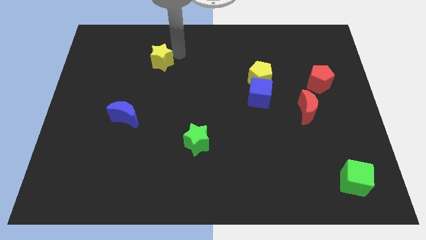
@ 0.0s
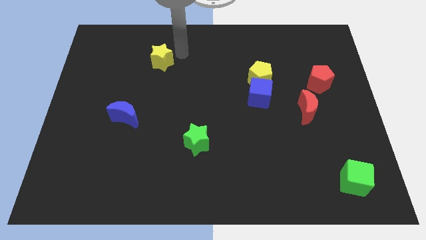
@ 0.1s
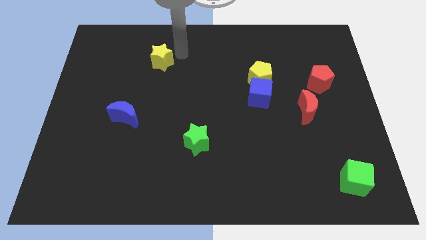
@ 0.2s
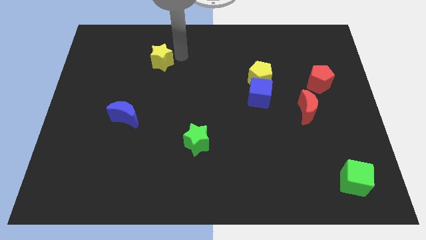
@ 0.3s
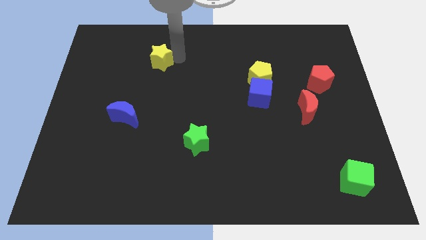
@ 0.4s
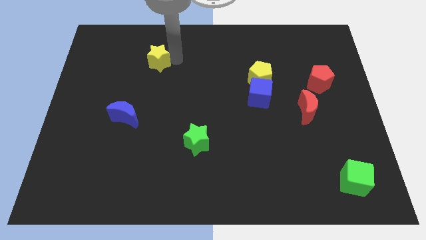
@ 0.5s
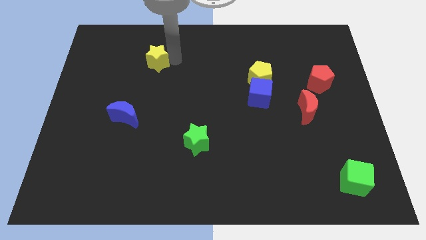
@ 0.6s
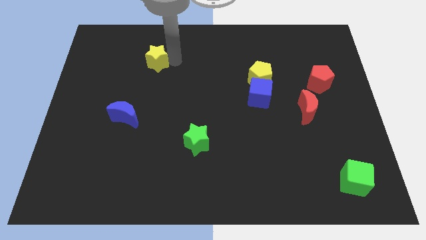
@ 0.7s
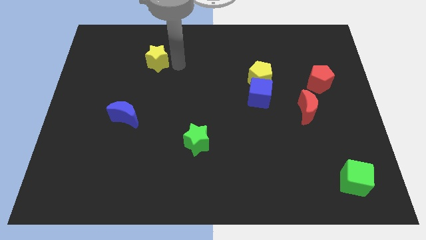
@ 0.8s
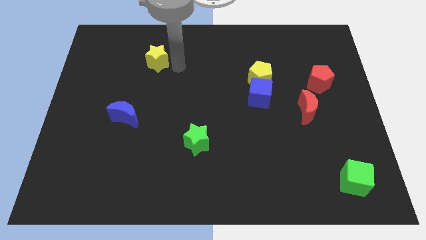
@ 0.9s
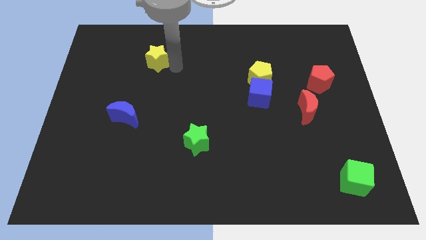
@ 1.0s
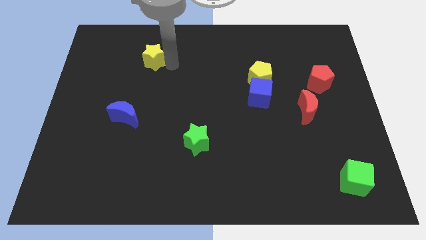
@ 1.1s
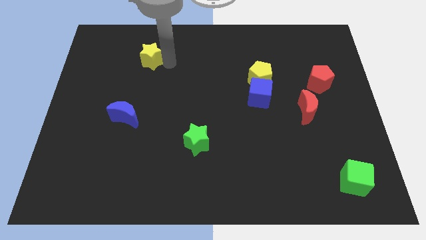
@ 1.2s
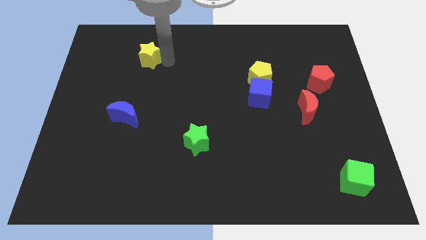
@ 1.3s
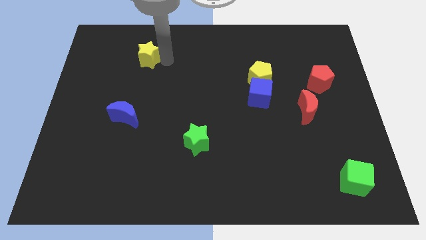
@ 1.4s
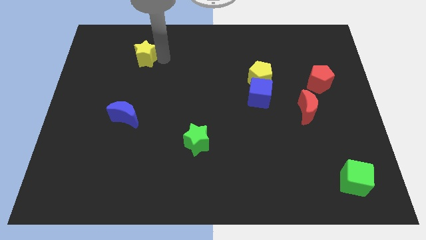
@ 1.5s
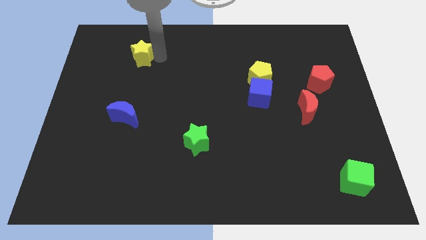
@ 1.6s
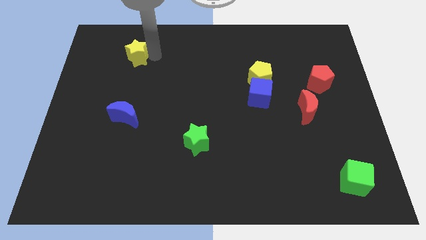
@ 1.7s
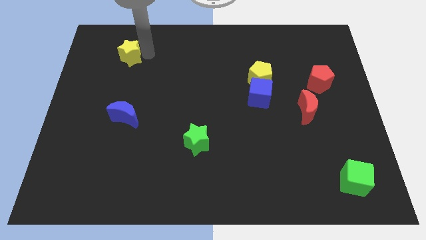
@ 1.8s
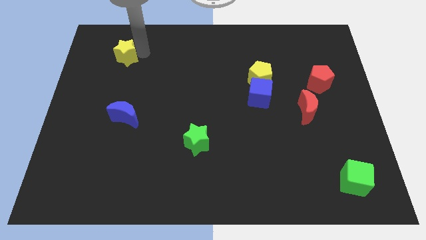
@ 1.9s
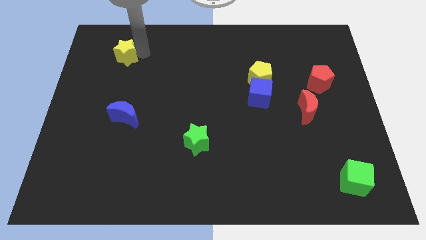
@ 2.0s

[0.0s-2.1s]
push the yellow star to the top of the blue crescent

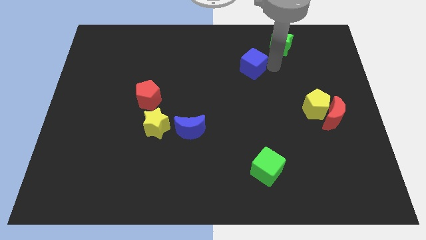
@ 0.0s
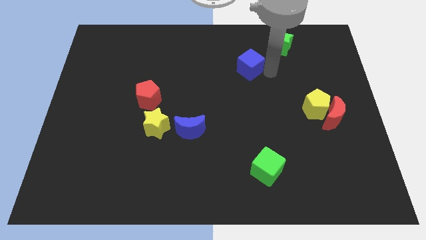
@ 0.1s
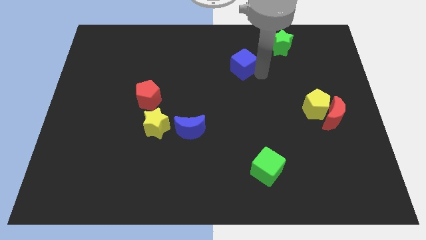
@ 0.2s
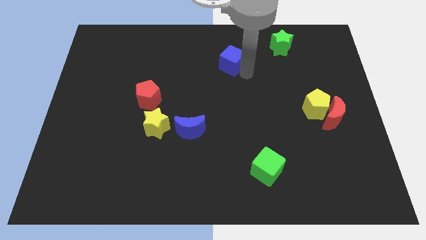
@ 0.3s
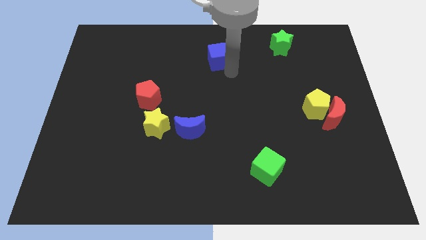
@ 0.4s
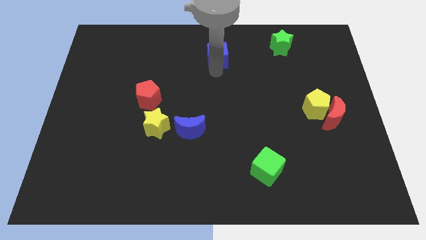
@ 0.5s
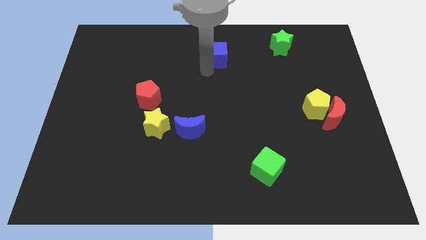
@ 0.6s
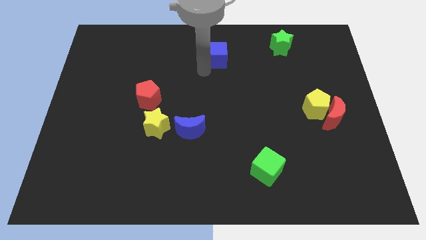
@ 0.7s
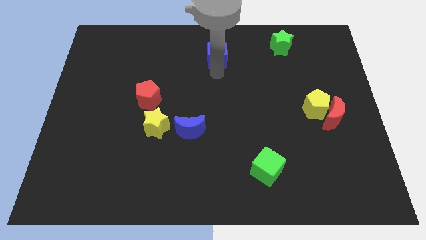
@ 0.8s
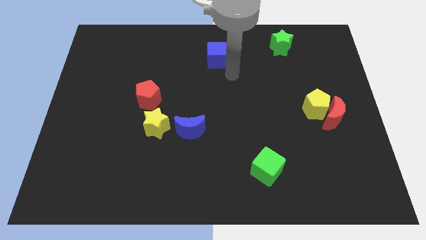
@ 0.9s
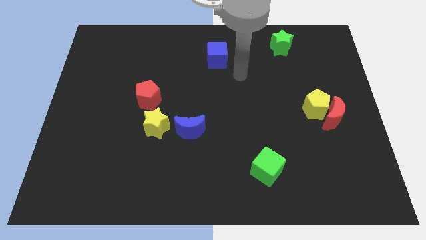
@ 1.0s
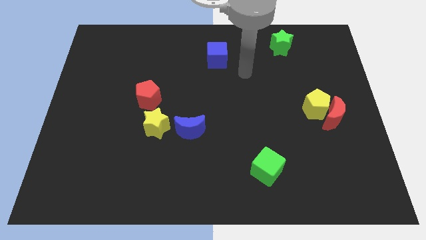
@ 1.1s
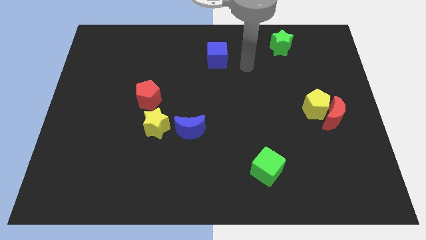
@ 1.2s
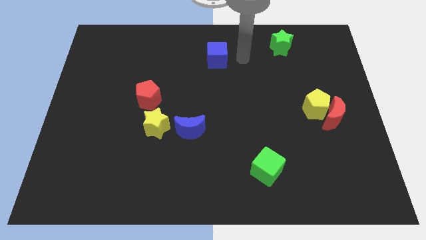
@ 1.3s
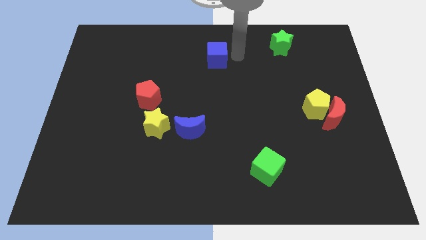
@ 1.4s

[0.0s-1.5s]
put the blue cube to the top center of the board

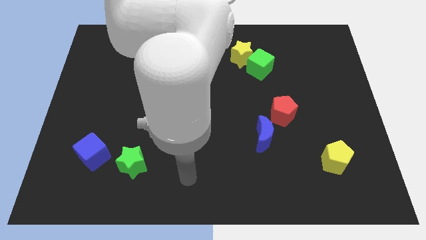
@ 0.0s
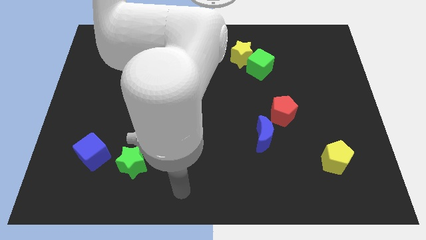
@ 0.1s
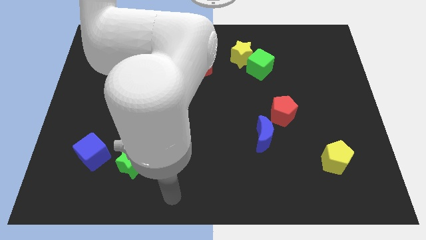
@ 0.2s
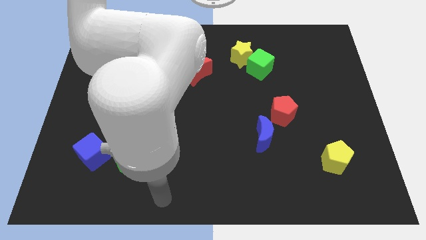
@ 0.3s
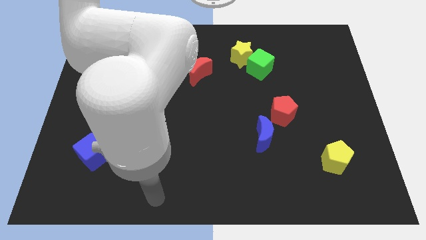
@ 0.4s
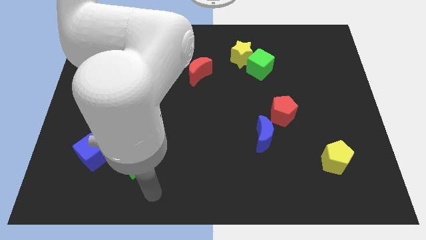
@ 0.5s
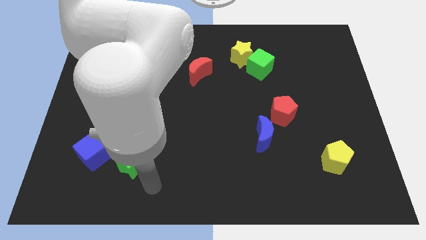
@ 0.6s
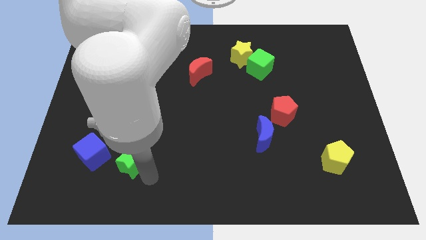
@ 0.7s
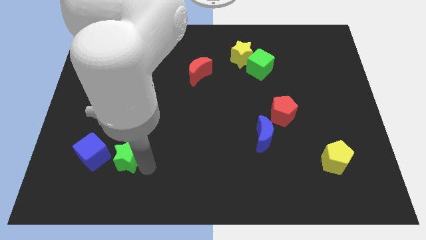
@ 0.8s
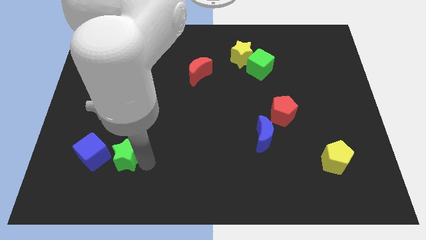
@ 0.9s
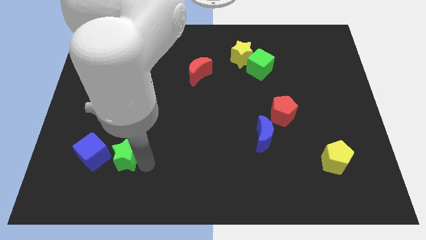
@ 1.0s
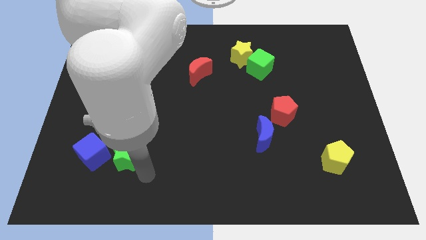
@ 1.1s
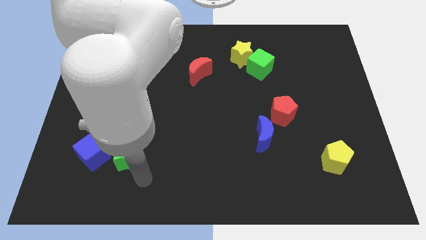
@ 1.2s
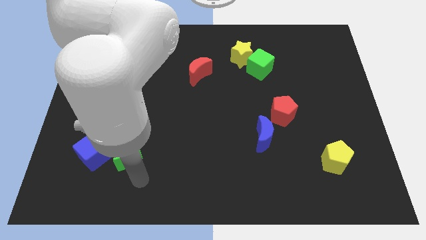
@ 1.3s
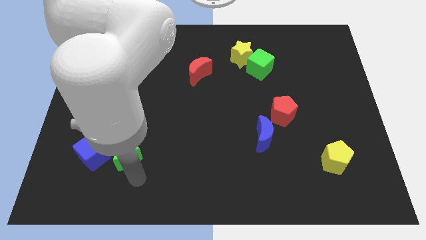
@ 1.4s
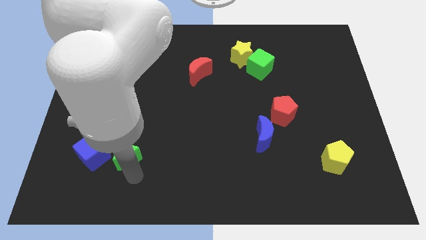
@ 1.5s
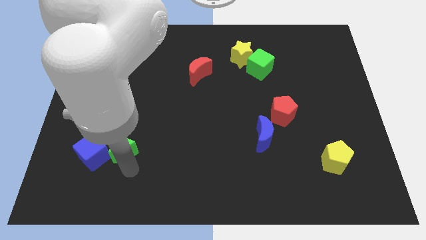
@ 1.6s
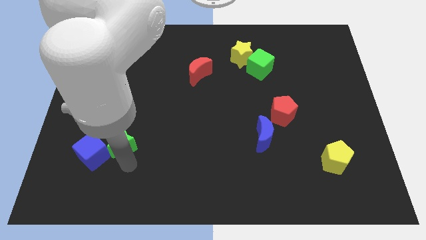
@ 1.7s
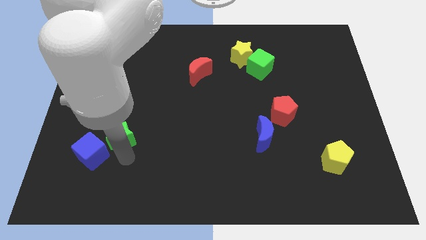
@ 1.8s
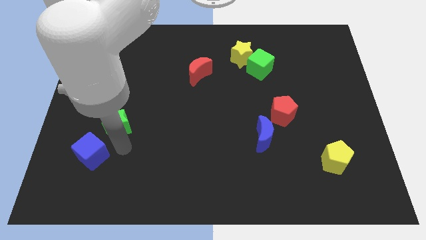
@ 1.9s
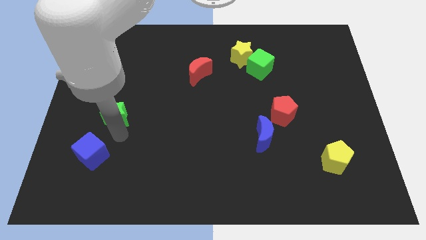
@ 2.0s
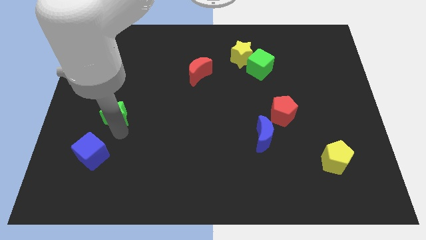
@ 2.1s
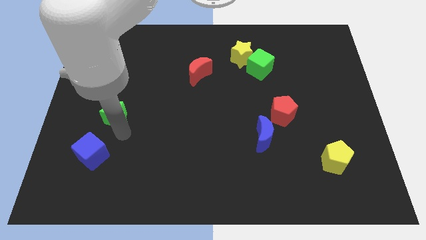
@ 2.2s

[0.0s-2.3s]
move the green star diagonally above the blue cube

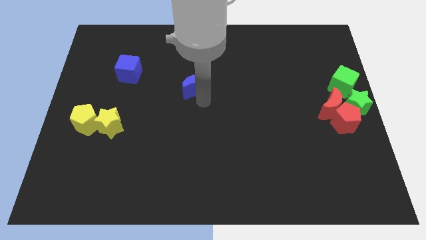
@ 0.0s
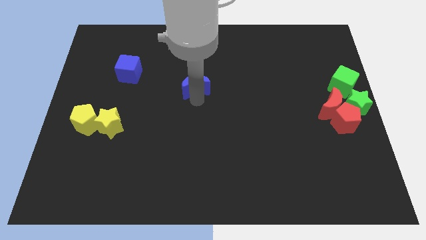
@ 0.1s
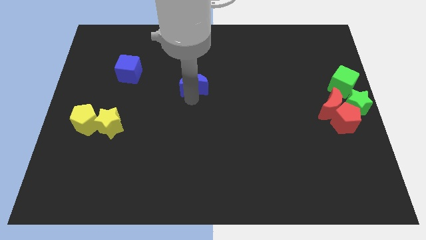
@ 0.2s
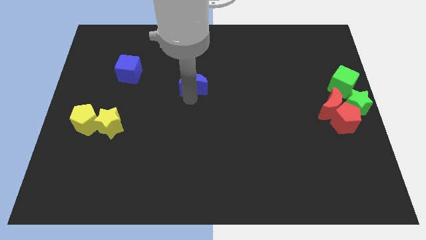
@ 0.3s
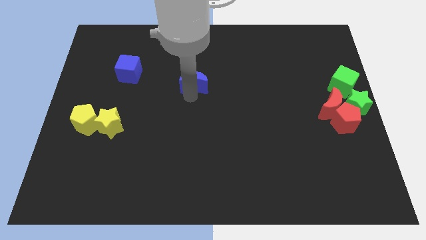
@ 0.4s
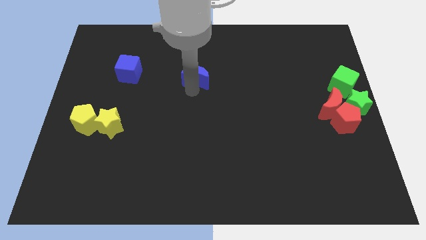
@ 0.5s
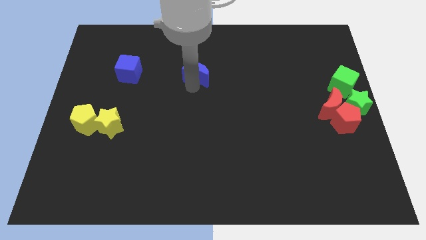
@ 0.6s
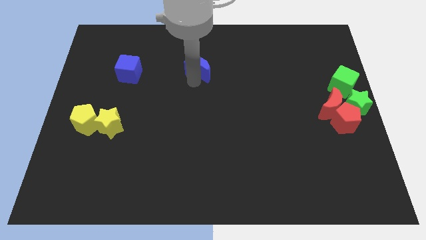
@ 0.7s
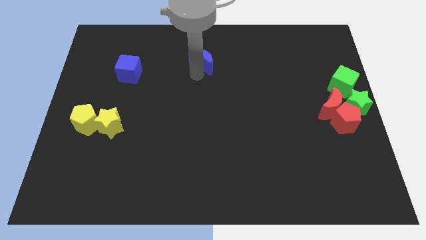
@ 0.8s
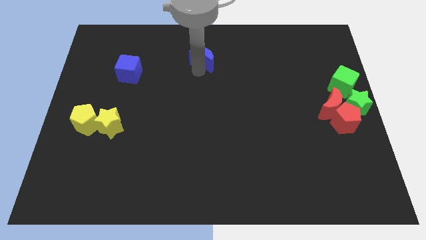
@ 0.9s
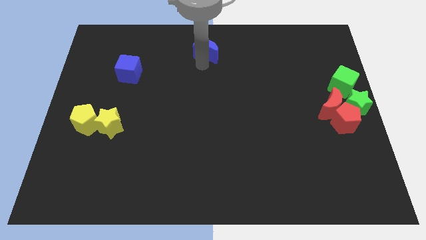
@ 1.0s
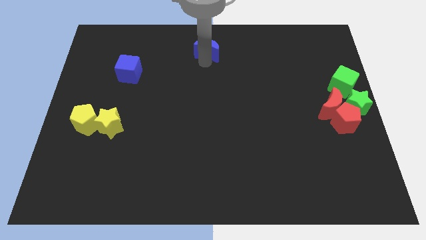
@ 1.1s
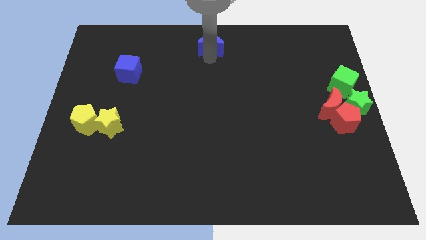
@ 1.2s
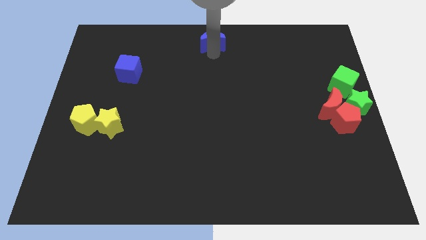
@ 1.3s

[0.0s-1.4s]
place the blue moon at the middle to the top end of the board

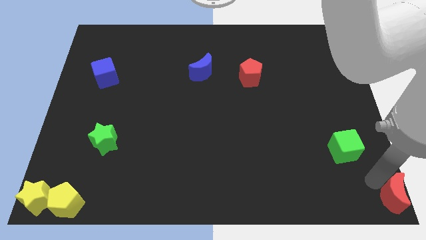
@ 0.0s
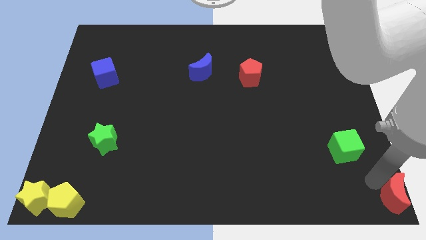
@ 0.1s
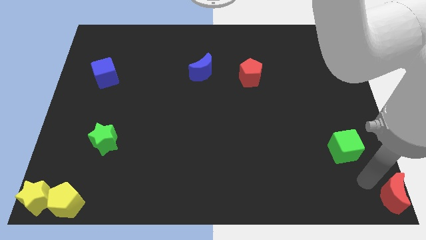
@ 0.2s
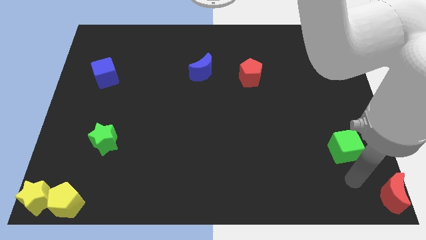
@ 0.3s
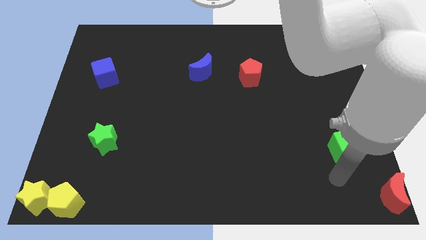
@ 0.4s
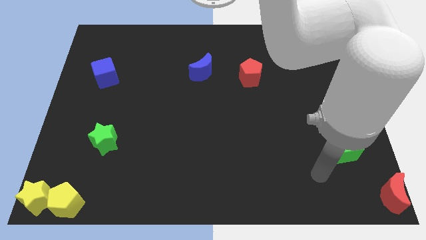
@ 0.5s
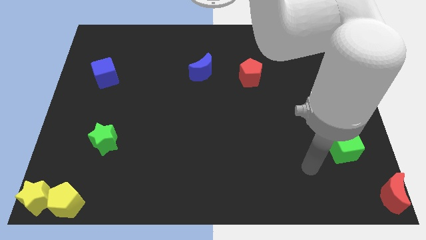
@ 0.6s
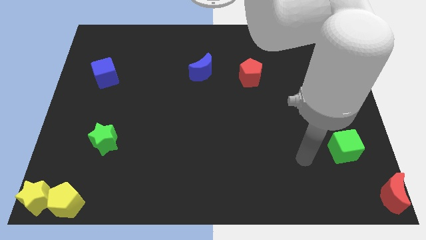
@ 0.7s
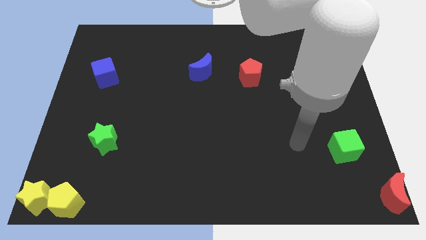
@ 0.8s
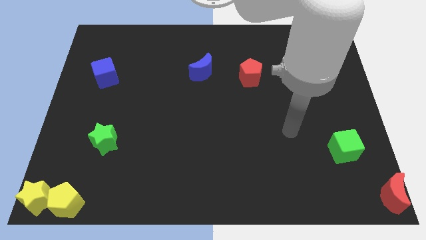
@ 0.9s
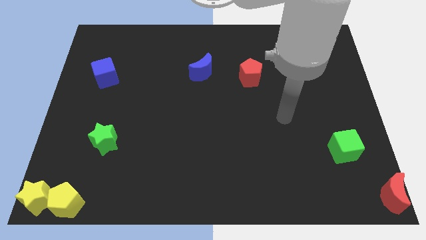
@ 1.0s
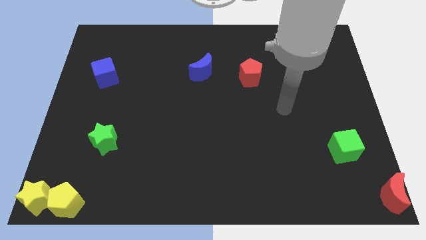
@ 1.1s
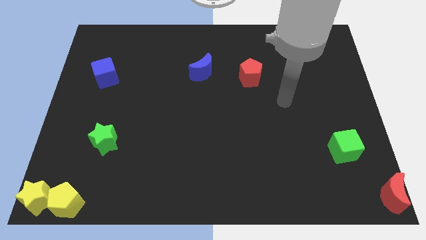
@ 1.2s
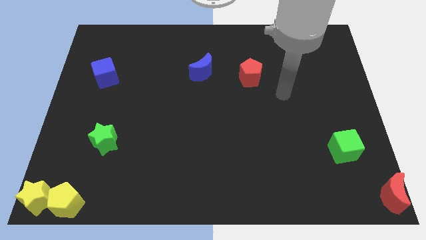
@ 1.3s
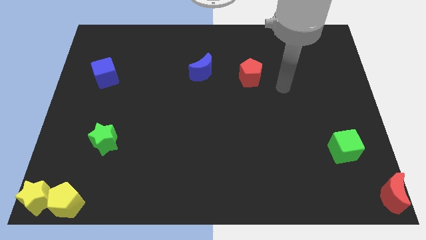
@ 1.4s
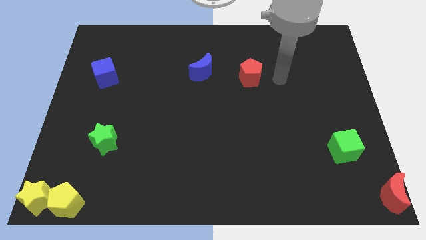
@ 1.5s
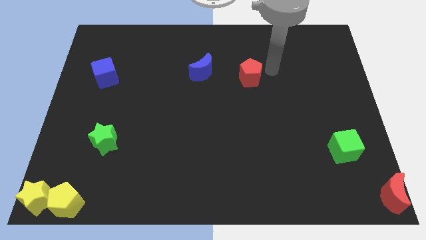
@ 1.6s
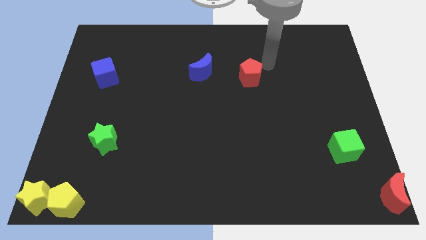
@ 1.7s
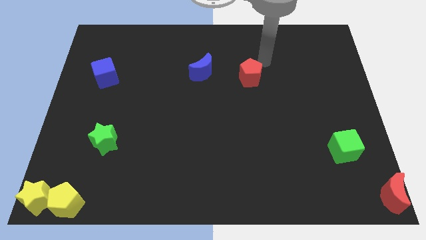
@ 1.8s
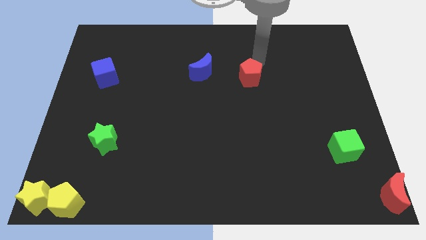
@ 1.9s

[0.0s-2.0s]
move your arm away from the red moon
